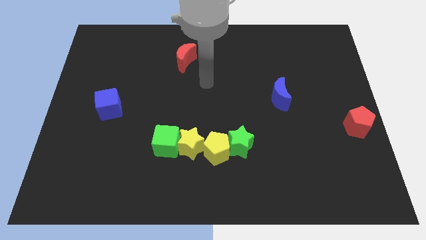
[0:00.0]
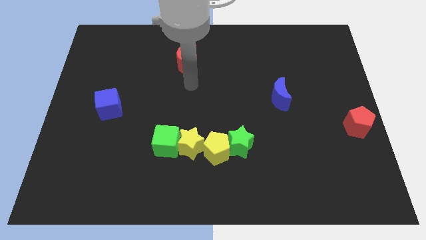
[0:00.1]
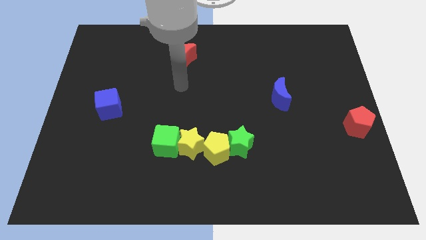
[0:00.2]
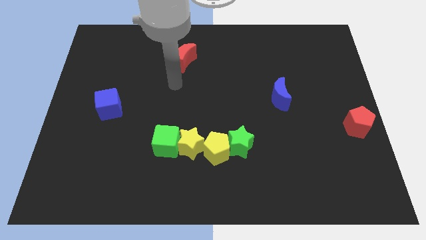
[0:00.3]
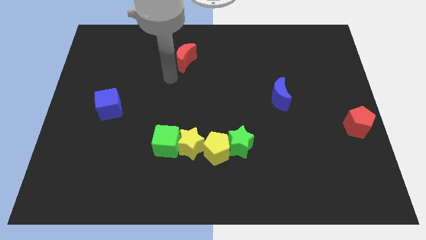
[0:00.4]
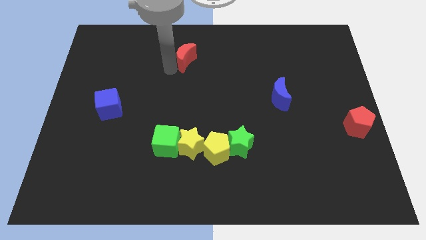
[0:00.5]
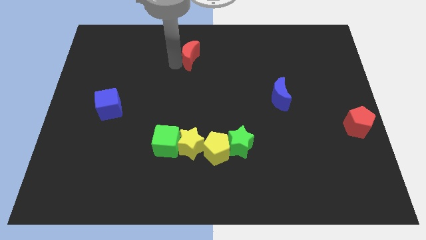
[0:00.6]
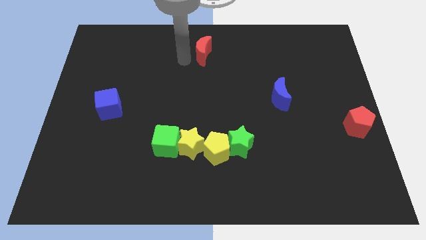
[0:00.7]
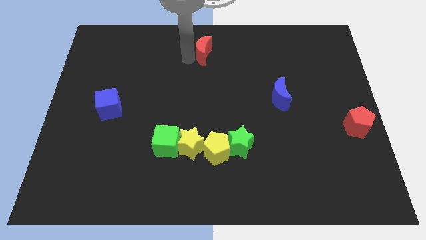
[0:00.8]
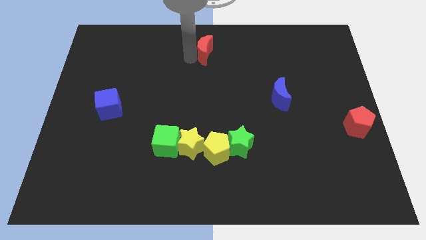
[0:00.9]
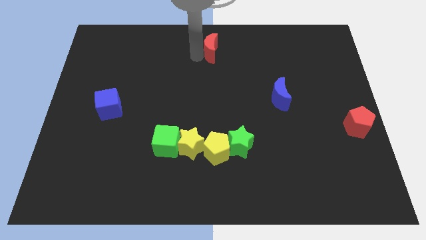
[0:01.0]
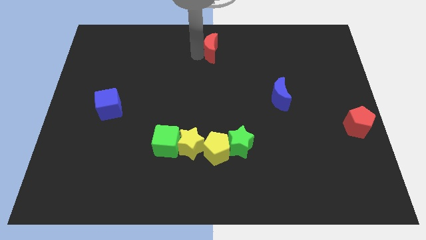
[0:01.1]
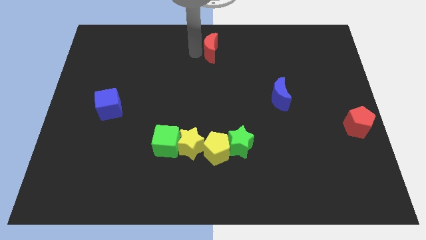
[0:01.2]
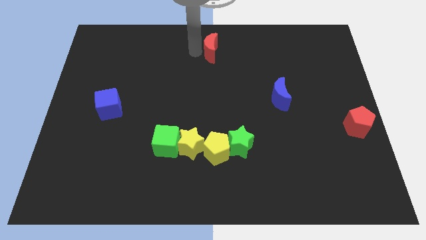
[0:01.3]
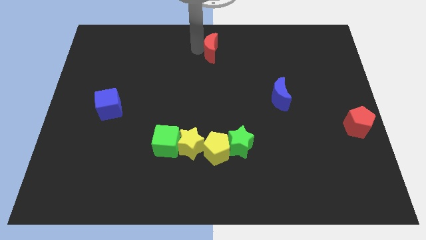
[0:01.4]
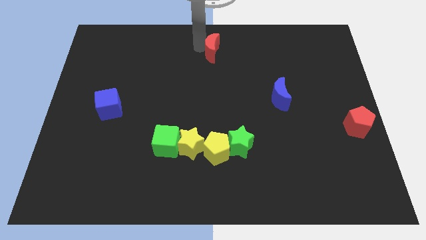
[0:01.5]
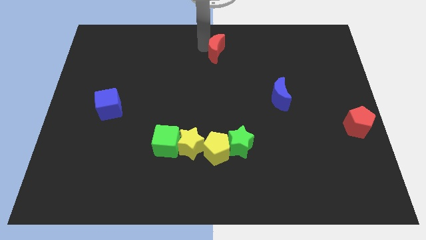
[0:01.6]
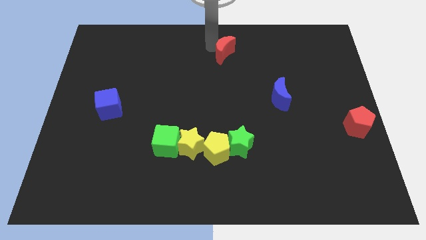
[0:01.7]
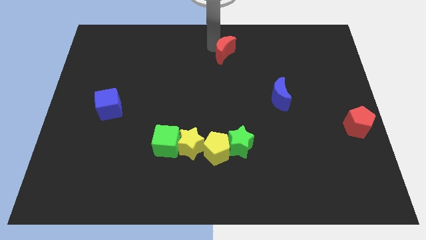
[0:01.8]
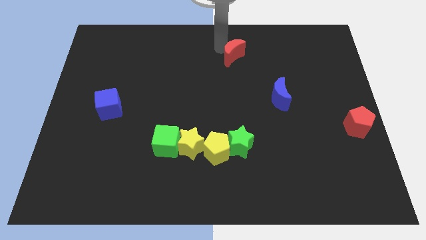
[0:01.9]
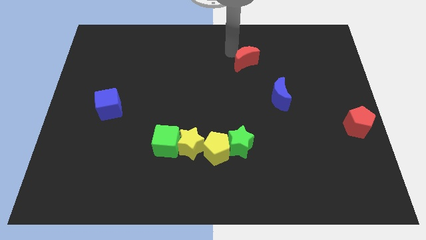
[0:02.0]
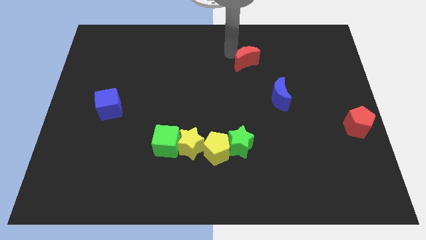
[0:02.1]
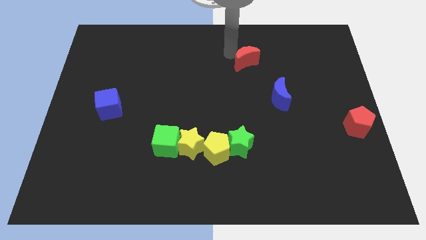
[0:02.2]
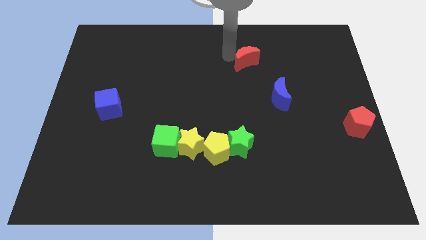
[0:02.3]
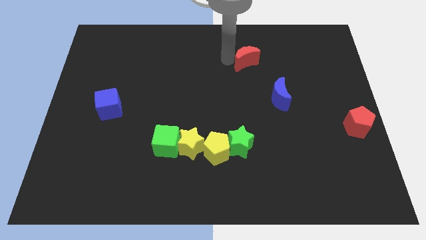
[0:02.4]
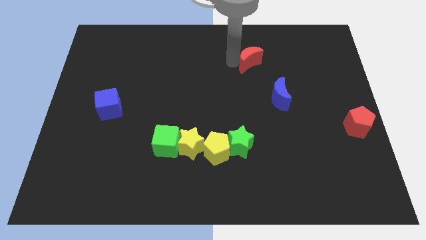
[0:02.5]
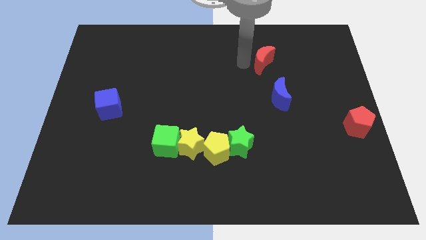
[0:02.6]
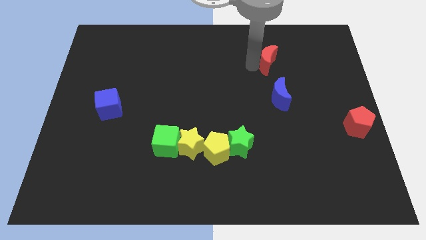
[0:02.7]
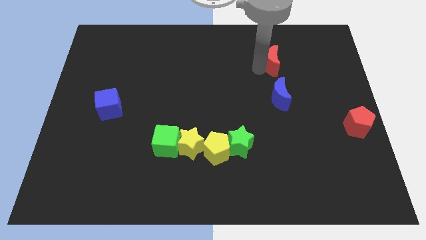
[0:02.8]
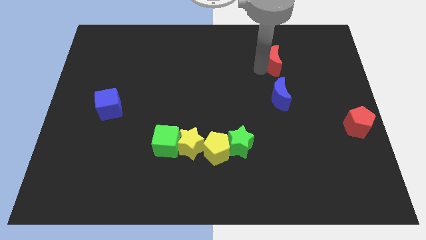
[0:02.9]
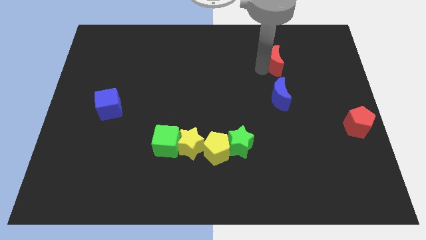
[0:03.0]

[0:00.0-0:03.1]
slide red moon on top of blue moon

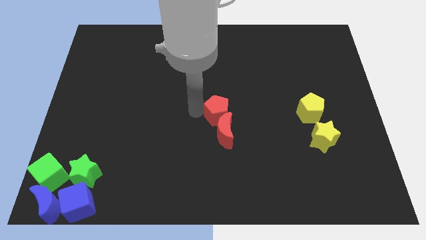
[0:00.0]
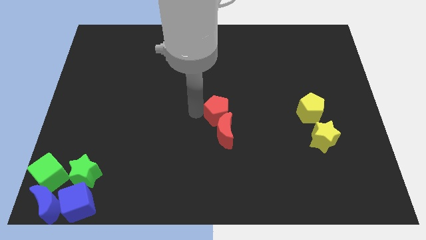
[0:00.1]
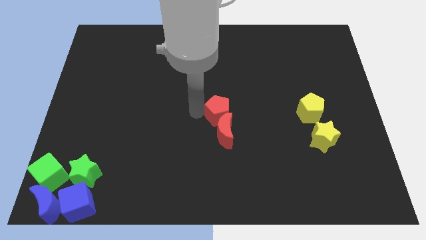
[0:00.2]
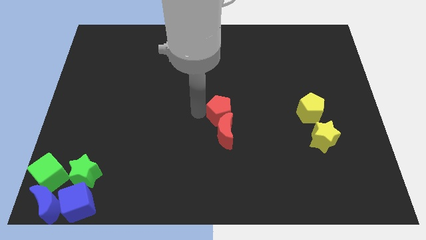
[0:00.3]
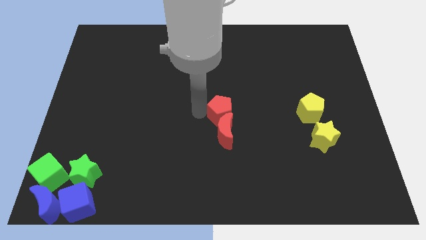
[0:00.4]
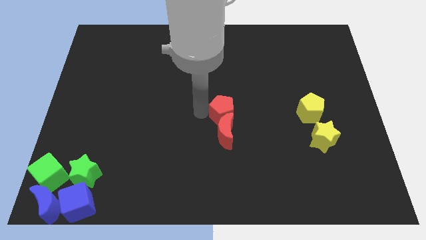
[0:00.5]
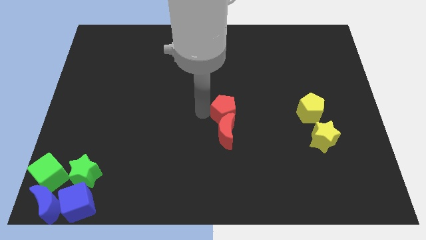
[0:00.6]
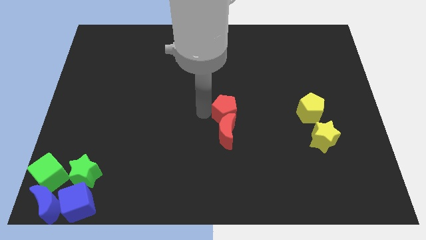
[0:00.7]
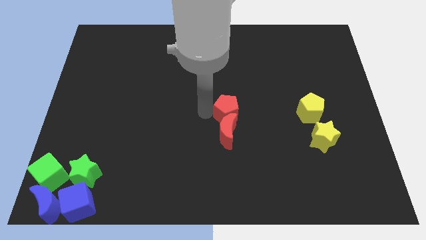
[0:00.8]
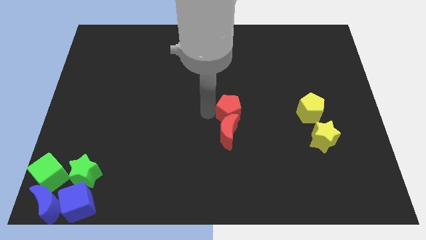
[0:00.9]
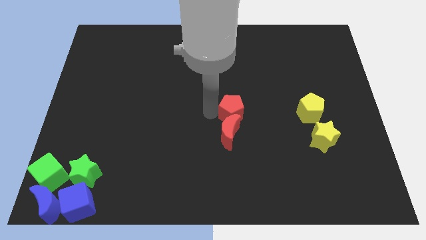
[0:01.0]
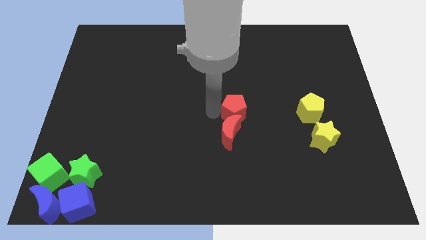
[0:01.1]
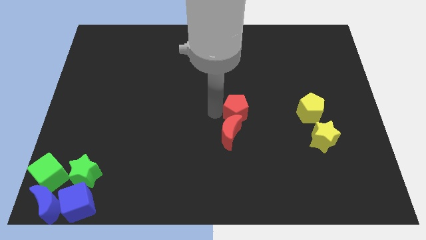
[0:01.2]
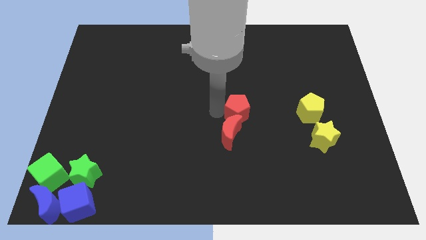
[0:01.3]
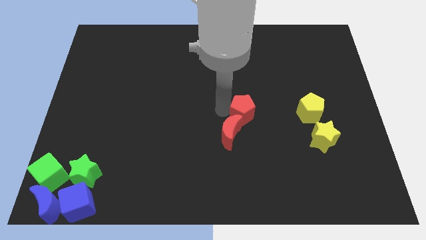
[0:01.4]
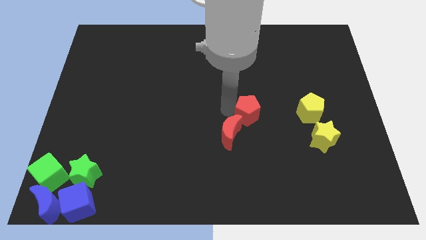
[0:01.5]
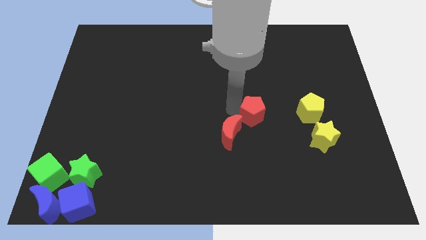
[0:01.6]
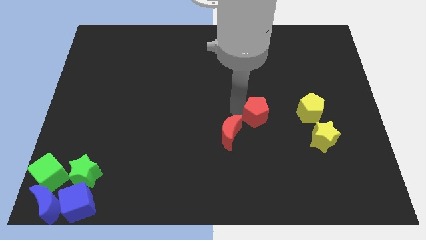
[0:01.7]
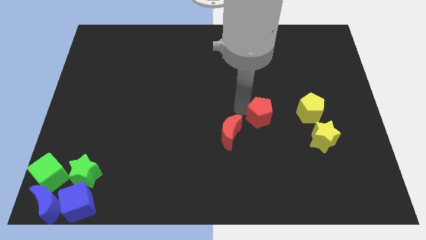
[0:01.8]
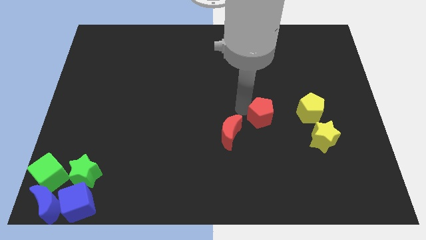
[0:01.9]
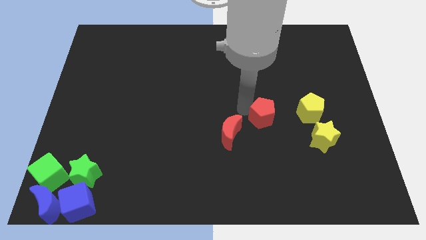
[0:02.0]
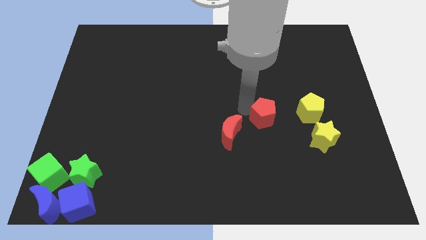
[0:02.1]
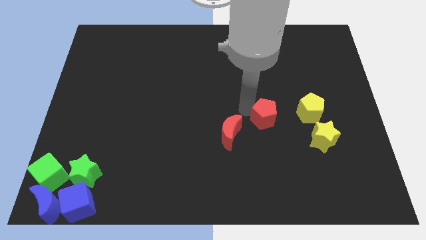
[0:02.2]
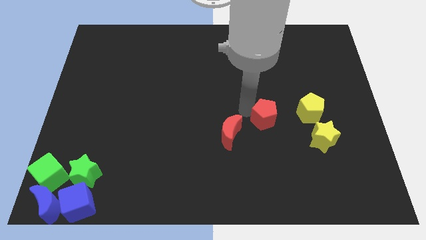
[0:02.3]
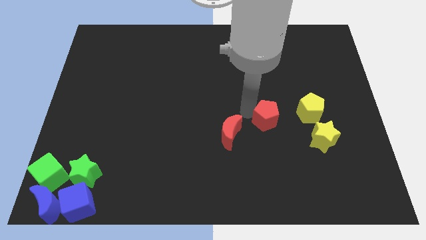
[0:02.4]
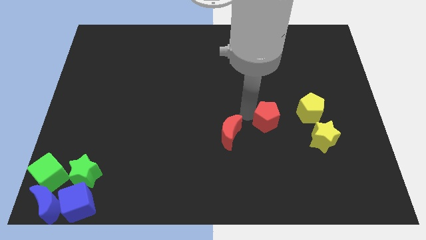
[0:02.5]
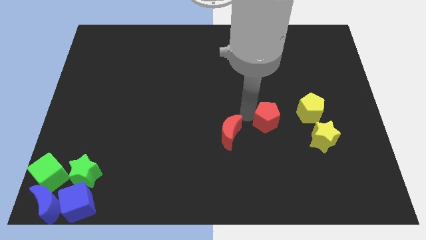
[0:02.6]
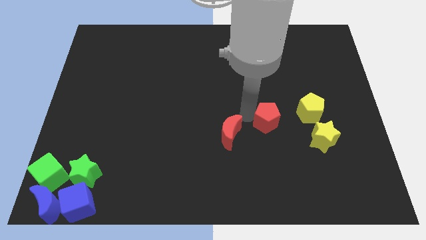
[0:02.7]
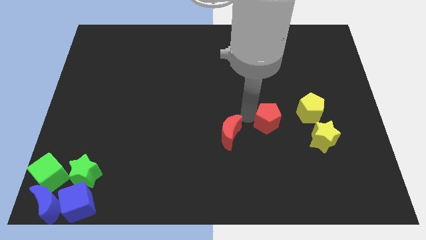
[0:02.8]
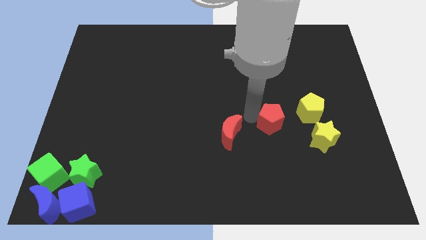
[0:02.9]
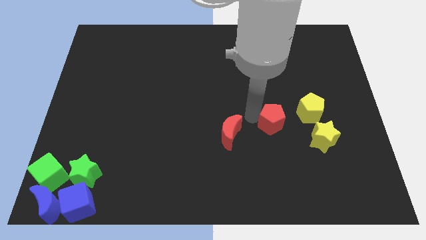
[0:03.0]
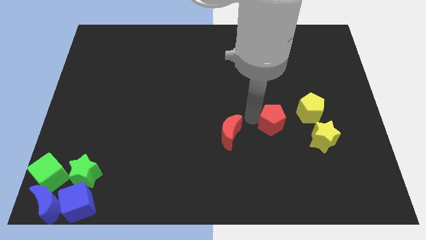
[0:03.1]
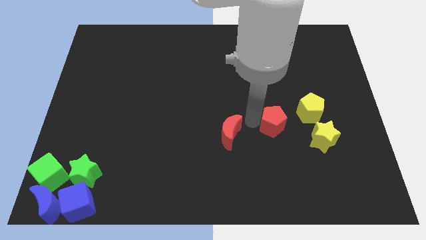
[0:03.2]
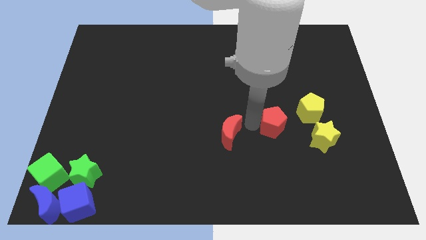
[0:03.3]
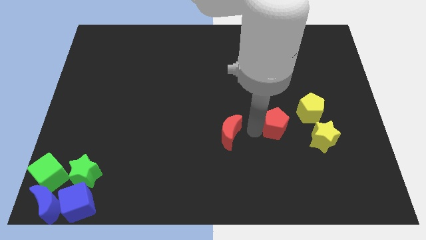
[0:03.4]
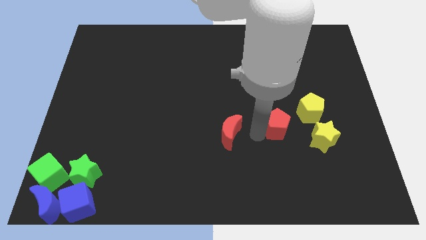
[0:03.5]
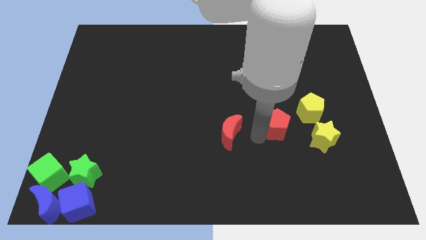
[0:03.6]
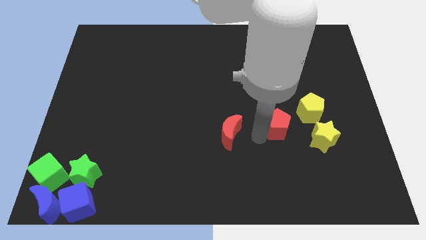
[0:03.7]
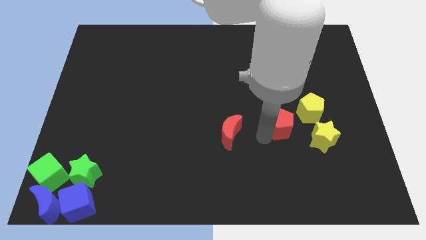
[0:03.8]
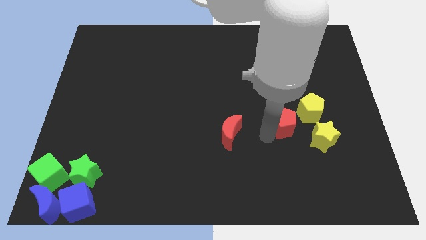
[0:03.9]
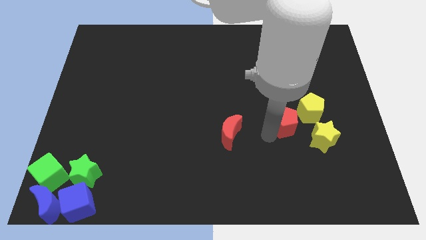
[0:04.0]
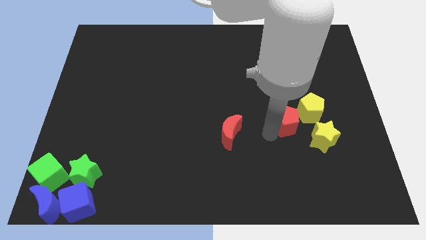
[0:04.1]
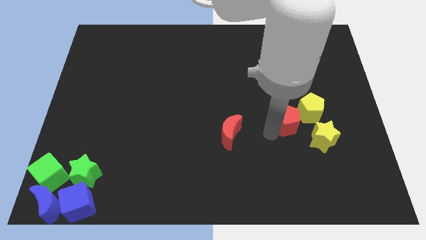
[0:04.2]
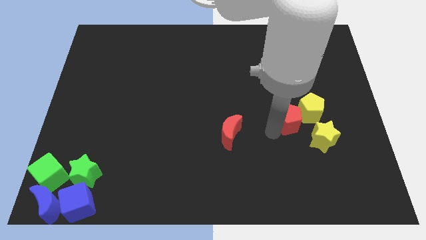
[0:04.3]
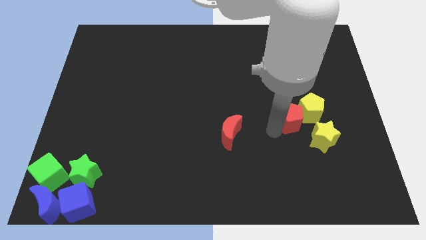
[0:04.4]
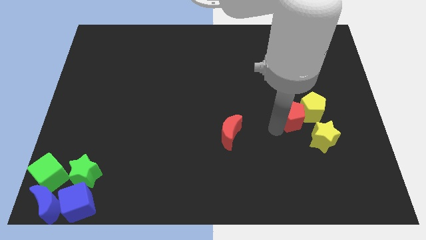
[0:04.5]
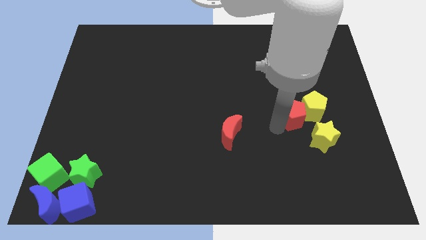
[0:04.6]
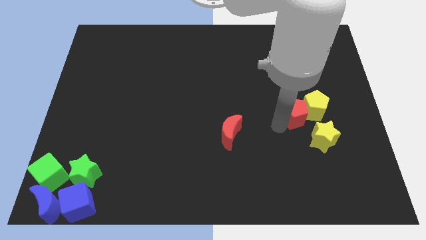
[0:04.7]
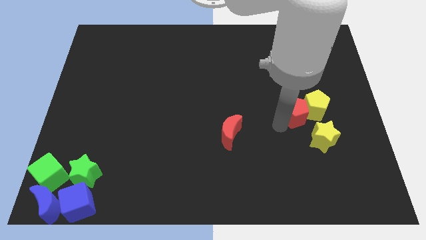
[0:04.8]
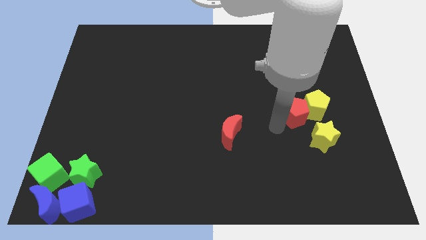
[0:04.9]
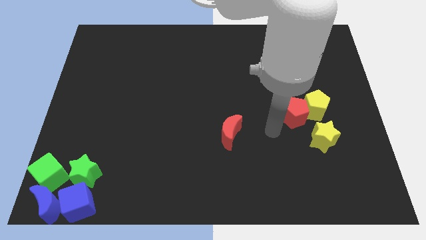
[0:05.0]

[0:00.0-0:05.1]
push red pentagon into the yellow pentagon

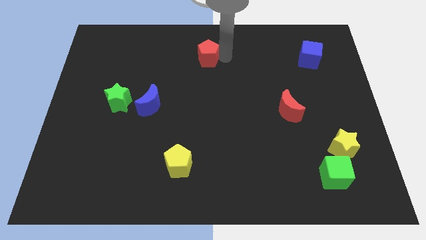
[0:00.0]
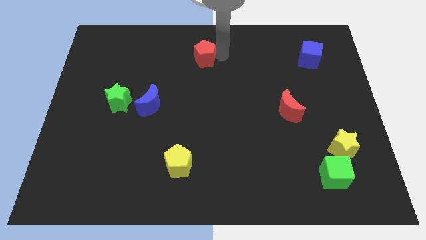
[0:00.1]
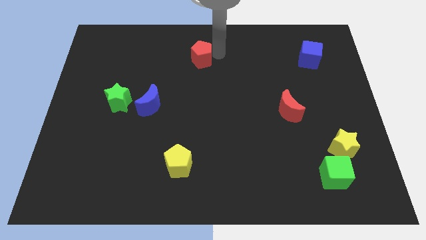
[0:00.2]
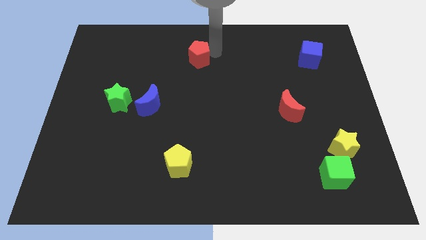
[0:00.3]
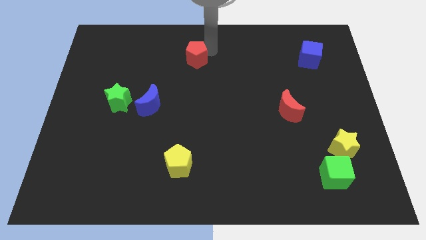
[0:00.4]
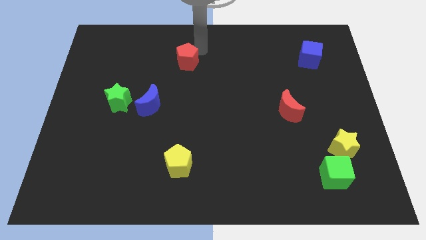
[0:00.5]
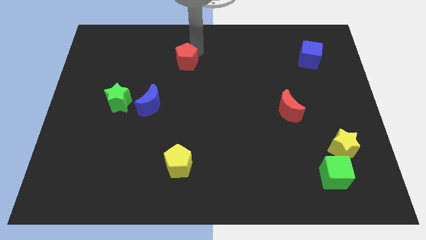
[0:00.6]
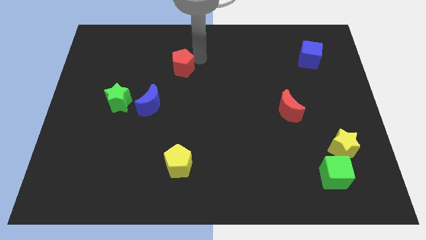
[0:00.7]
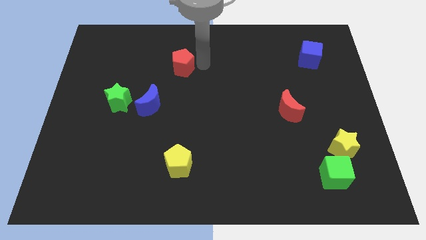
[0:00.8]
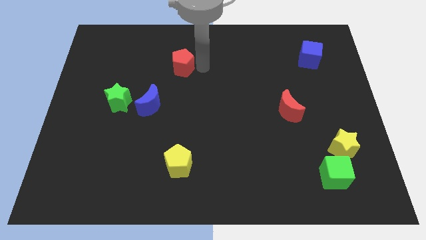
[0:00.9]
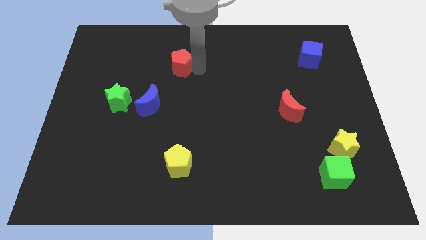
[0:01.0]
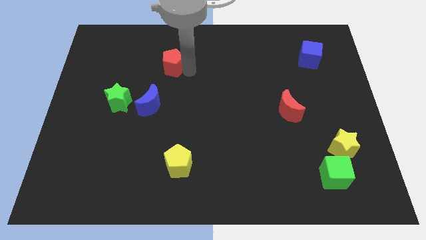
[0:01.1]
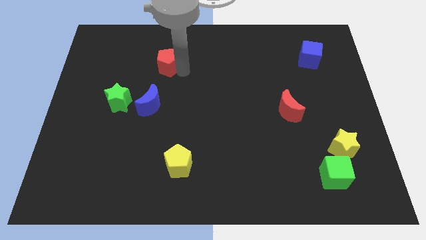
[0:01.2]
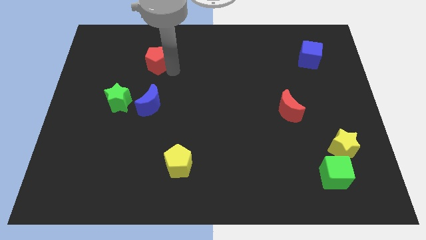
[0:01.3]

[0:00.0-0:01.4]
put the red pentagon at the top of blue crescent
